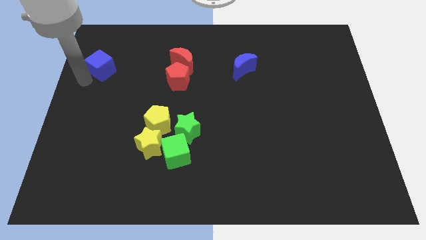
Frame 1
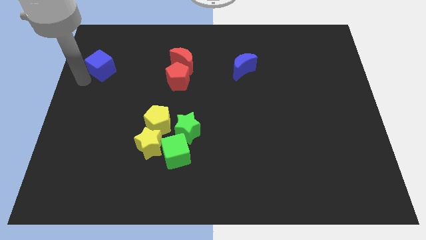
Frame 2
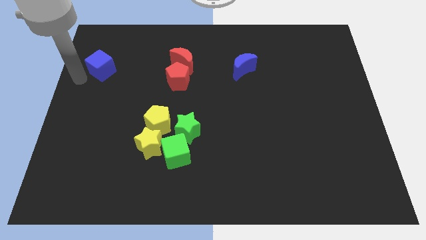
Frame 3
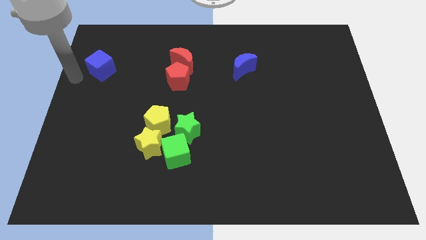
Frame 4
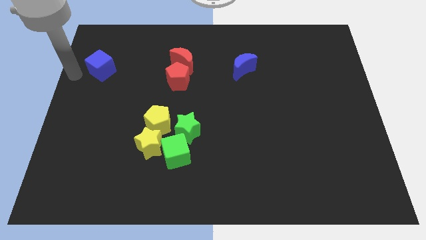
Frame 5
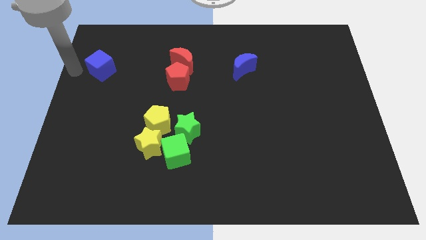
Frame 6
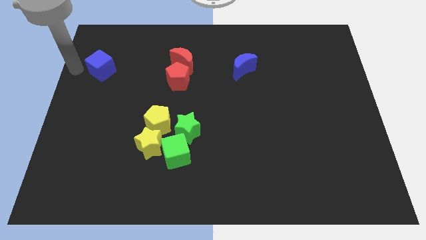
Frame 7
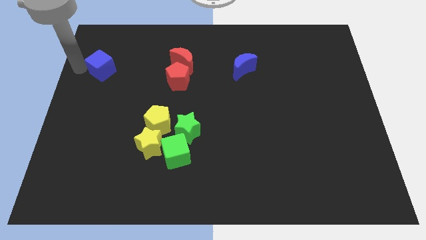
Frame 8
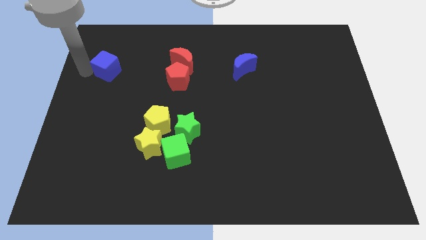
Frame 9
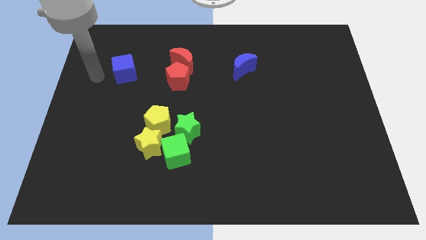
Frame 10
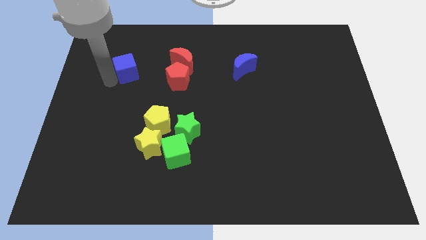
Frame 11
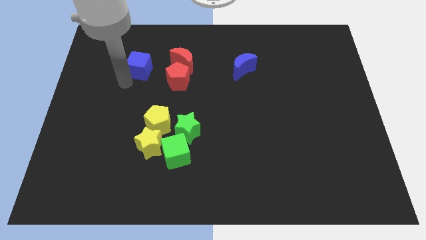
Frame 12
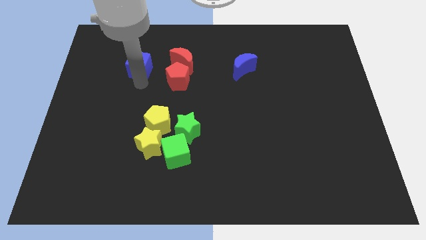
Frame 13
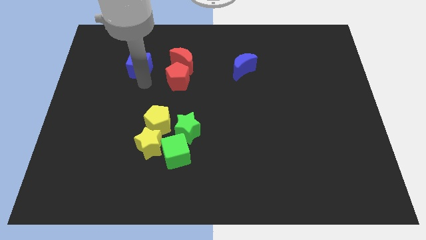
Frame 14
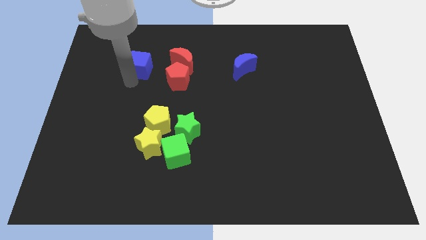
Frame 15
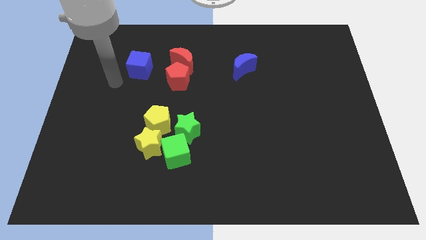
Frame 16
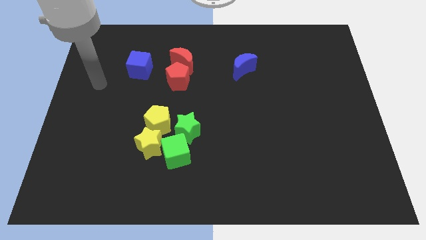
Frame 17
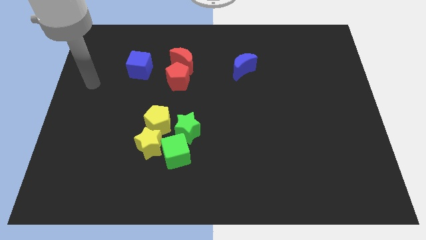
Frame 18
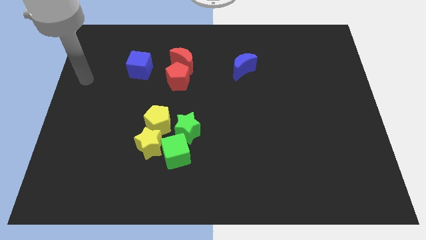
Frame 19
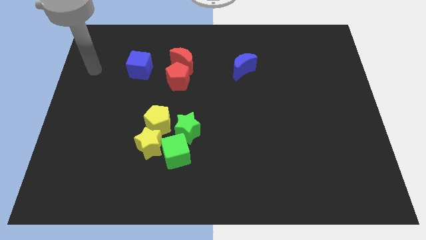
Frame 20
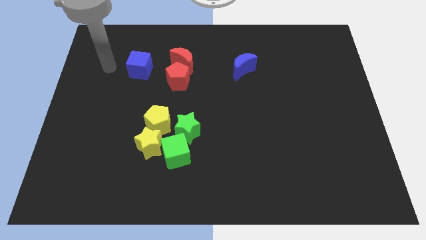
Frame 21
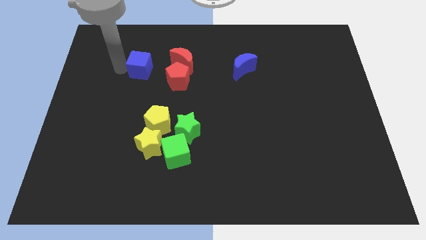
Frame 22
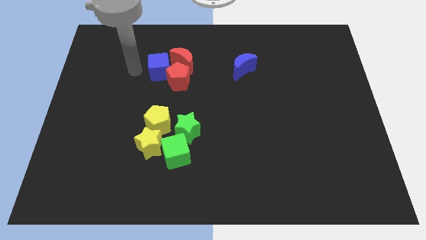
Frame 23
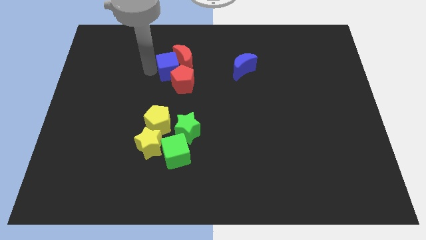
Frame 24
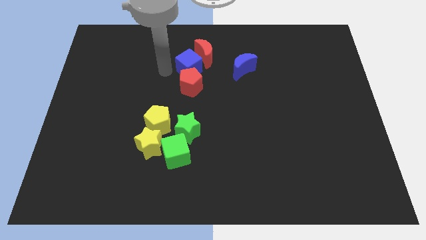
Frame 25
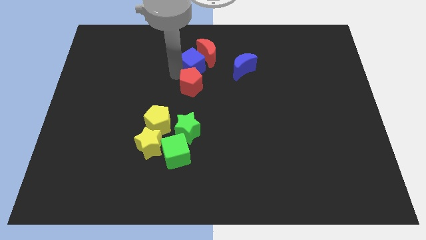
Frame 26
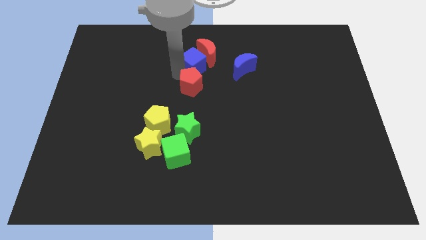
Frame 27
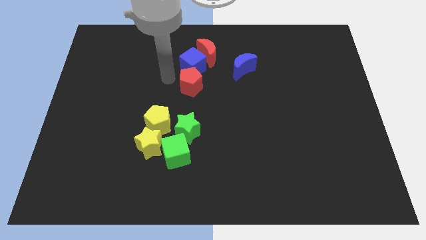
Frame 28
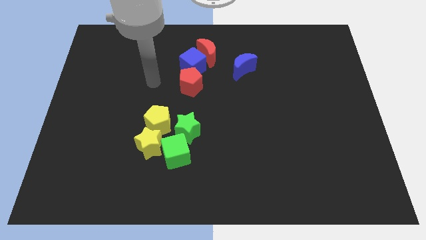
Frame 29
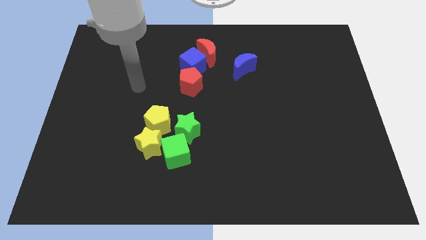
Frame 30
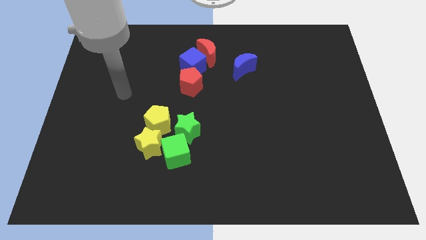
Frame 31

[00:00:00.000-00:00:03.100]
place blue cube above red pentagon

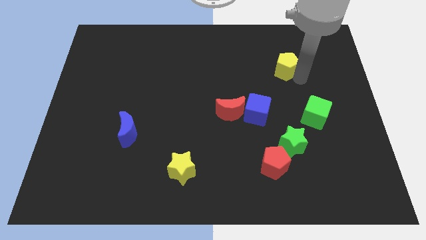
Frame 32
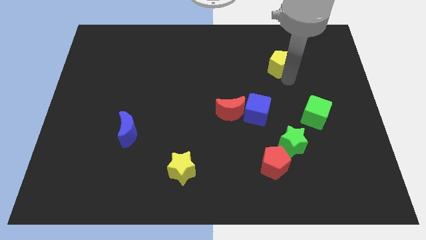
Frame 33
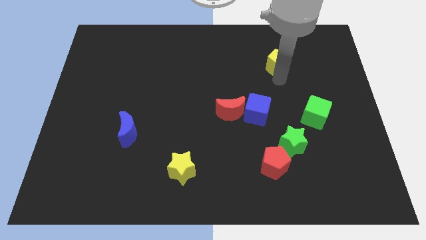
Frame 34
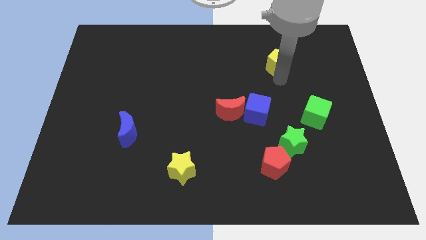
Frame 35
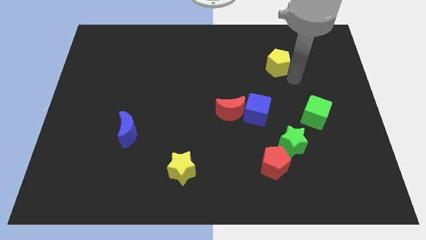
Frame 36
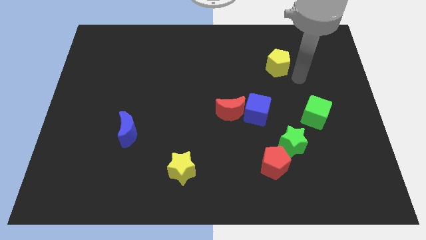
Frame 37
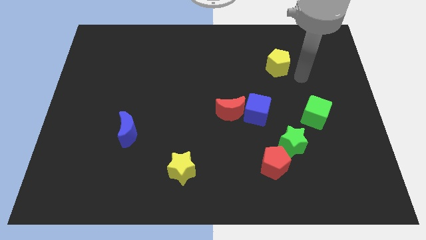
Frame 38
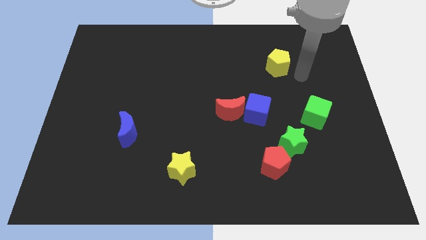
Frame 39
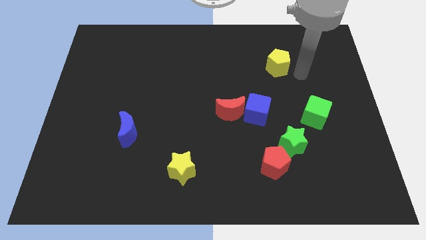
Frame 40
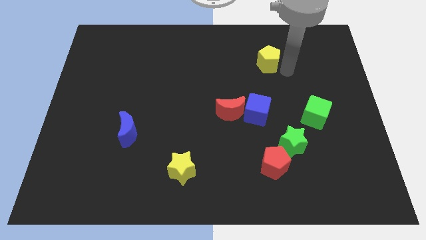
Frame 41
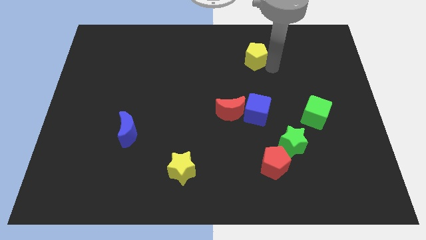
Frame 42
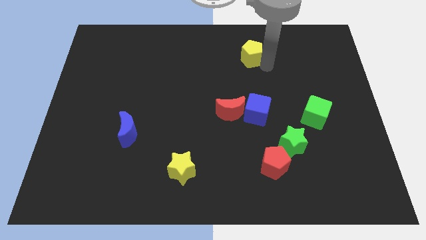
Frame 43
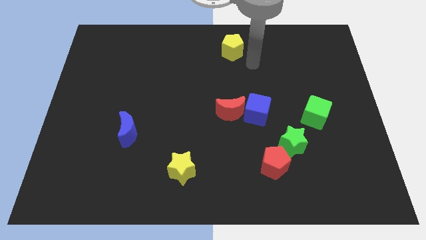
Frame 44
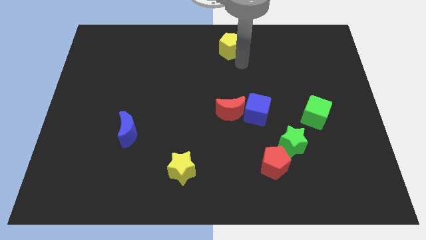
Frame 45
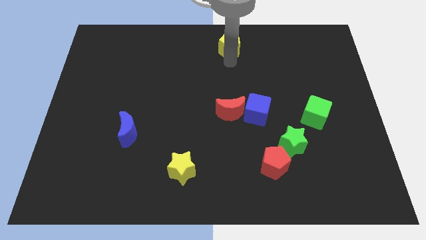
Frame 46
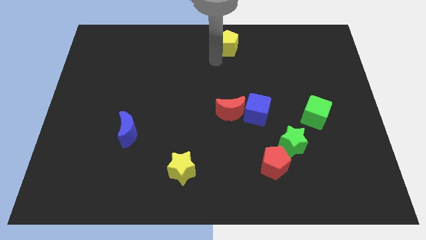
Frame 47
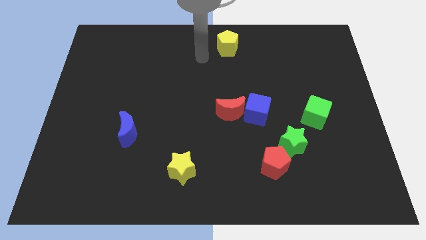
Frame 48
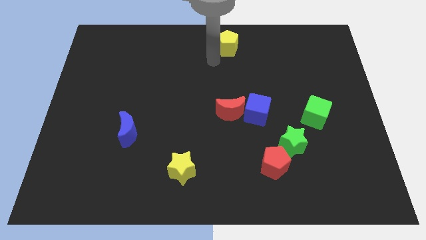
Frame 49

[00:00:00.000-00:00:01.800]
place the yellow pentagon to the top middle of the board

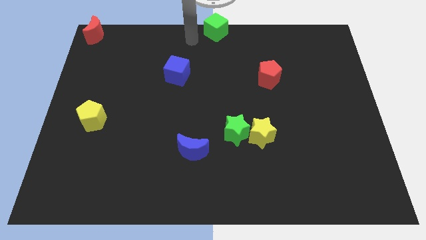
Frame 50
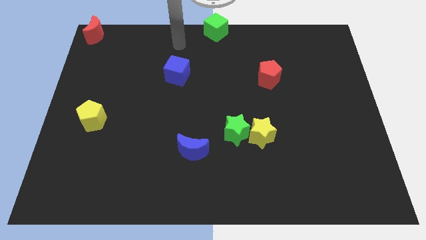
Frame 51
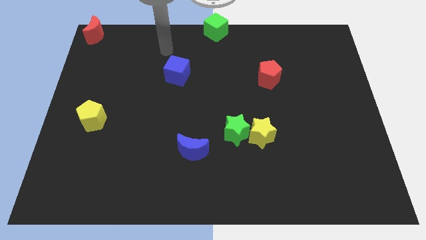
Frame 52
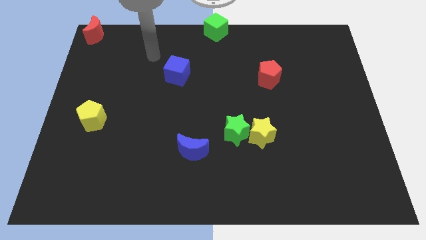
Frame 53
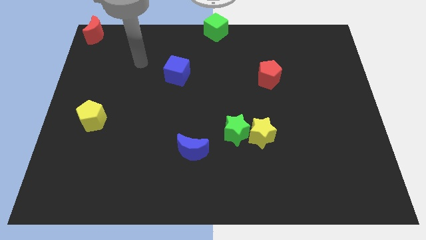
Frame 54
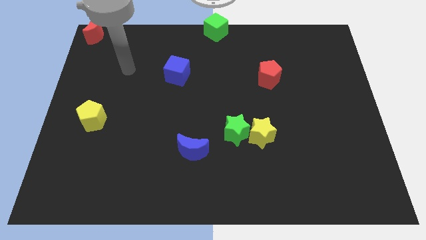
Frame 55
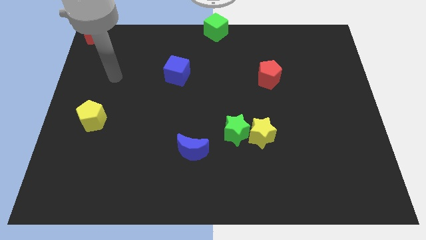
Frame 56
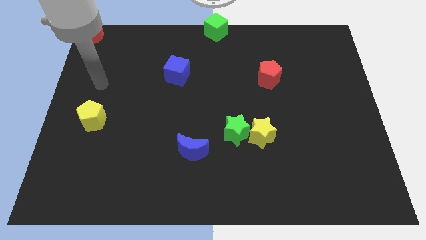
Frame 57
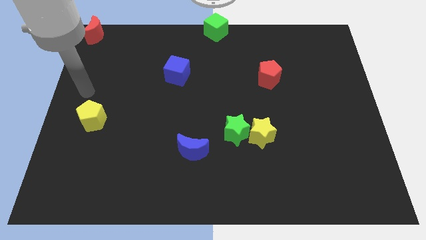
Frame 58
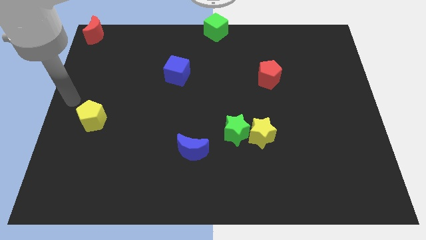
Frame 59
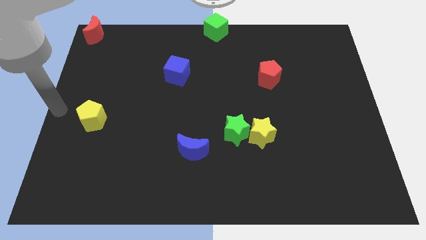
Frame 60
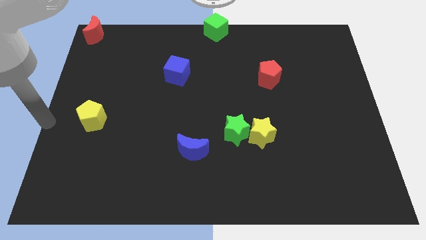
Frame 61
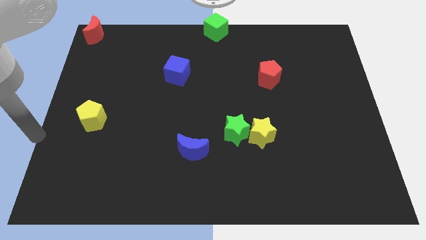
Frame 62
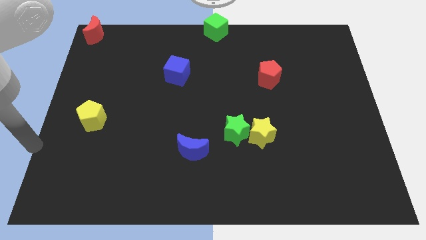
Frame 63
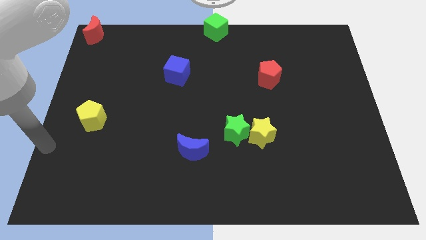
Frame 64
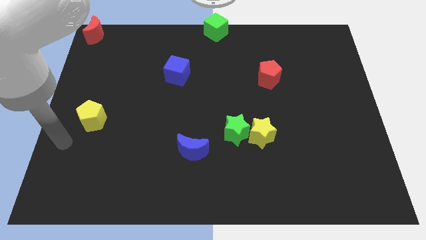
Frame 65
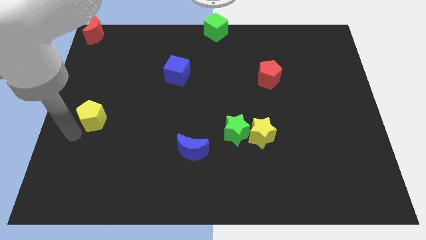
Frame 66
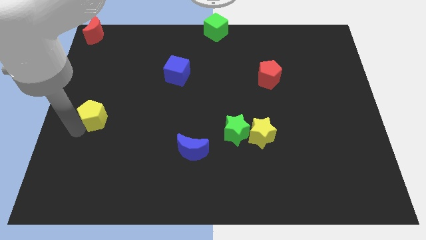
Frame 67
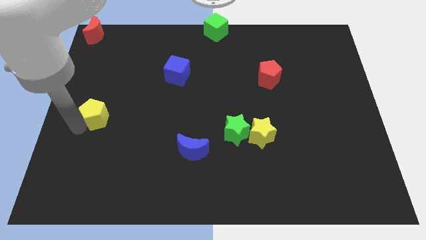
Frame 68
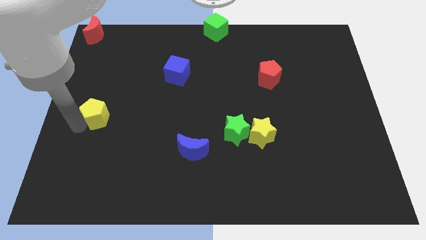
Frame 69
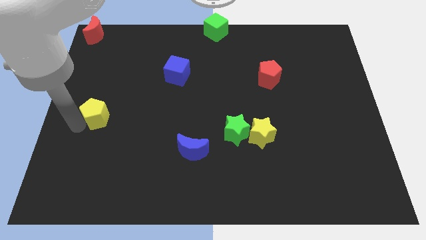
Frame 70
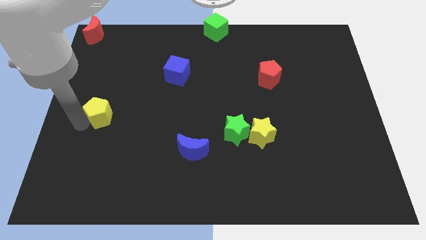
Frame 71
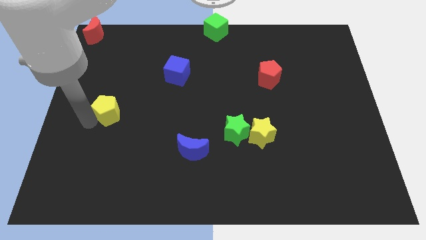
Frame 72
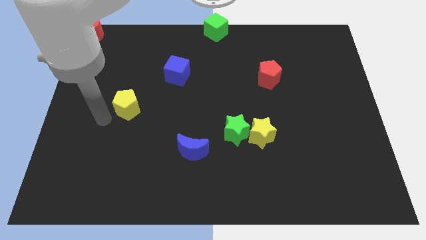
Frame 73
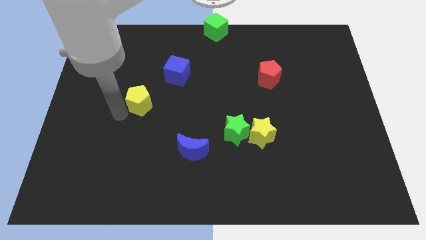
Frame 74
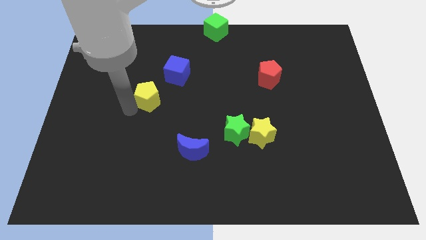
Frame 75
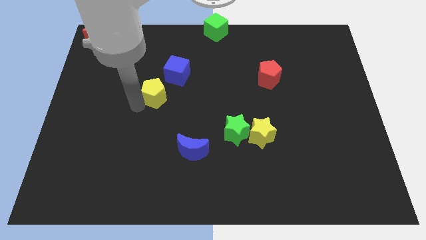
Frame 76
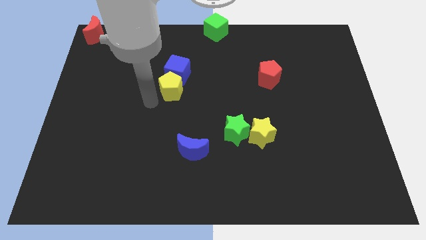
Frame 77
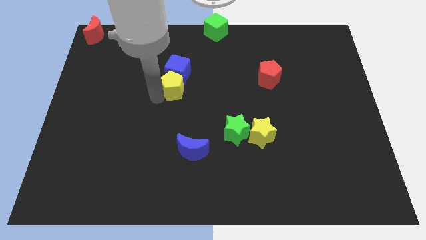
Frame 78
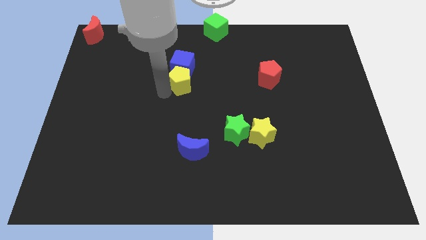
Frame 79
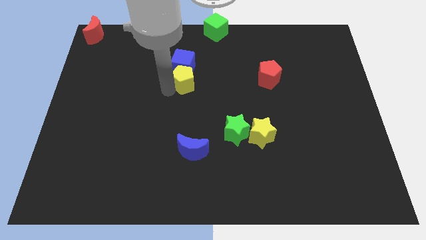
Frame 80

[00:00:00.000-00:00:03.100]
push the yellow pentagon into the blue cube

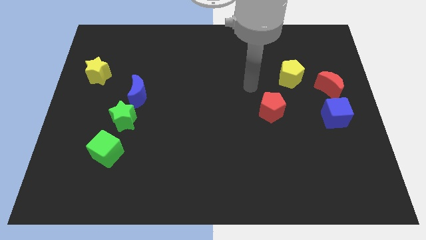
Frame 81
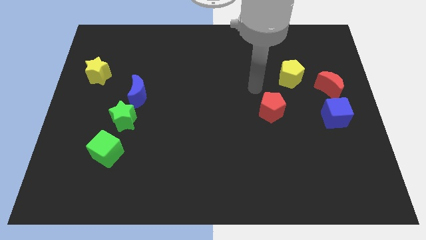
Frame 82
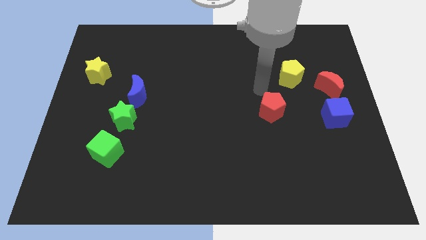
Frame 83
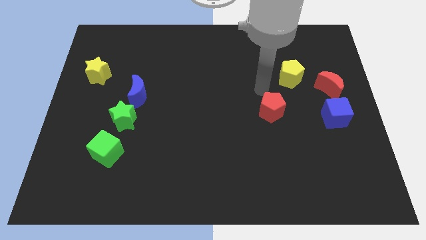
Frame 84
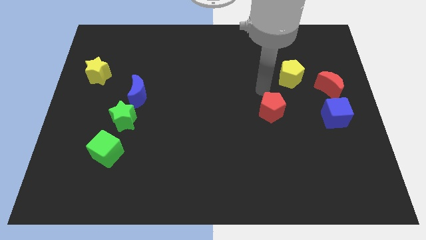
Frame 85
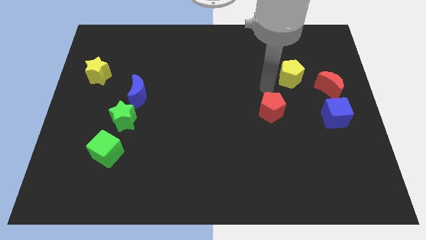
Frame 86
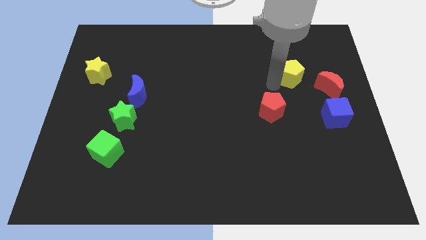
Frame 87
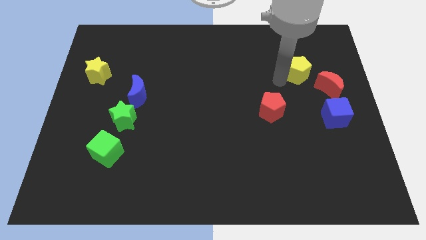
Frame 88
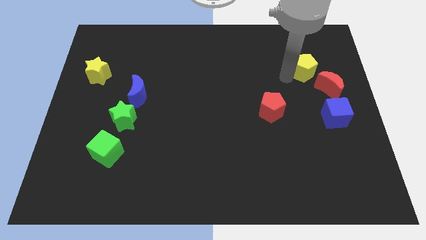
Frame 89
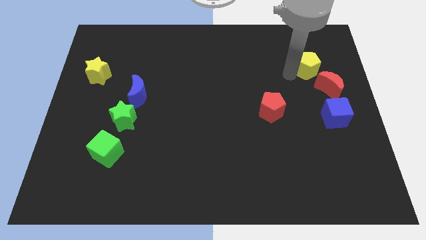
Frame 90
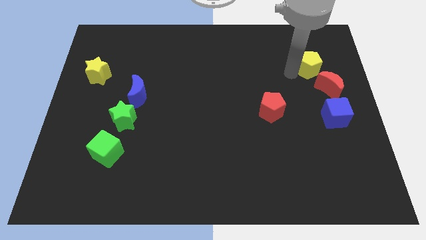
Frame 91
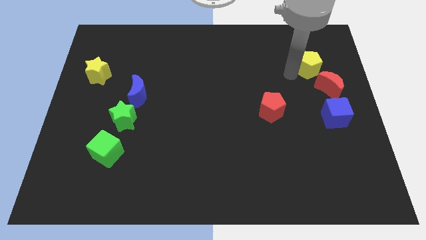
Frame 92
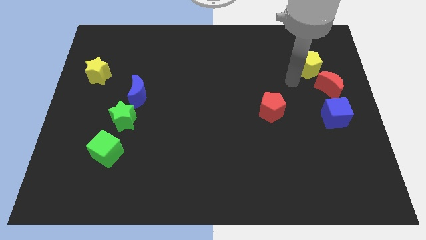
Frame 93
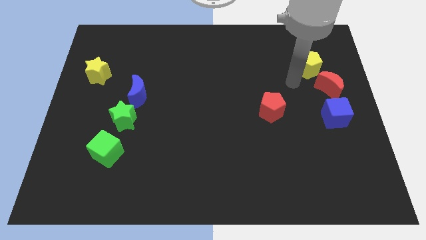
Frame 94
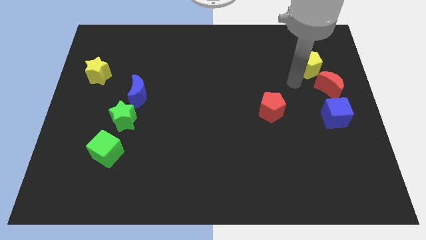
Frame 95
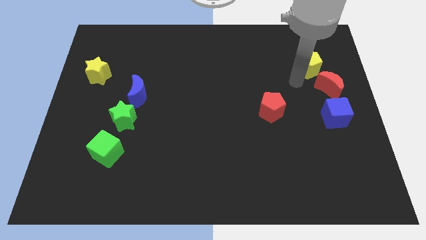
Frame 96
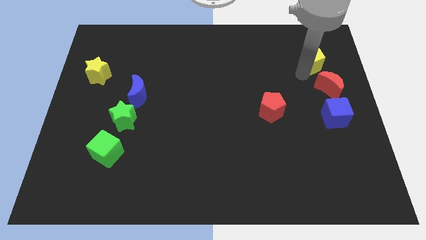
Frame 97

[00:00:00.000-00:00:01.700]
place the yellow pentagon diagonal to the red moon
